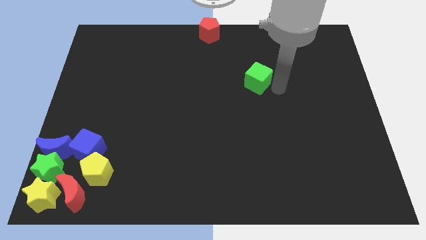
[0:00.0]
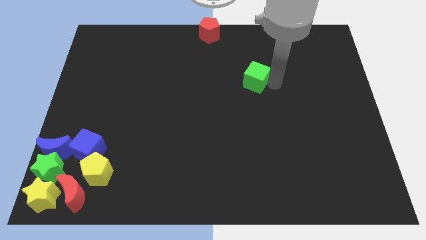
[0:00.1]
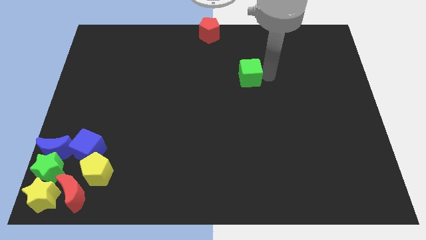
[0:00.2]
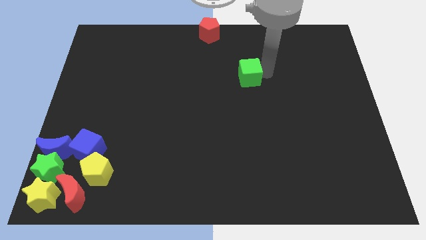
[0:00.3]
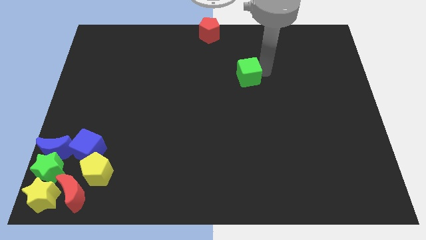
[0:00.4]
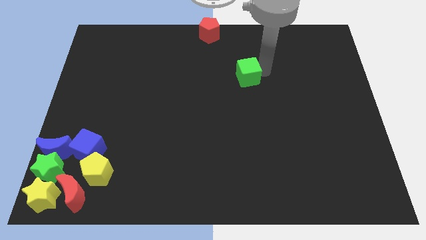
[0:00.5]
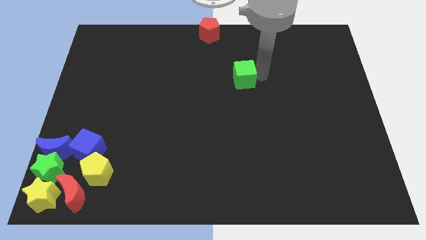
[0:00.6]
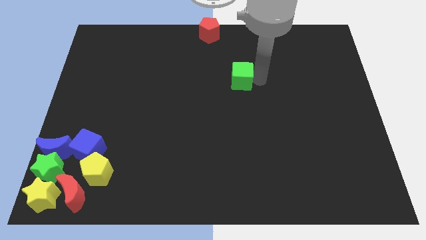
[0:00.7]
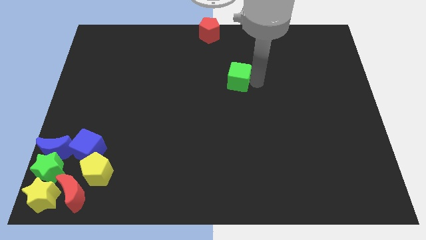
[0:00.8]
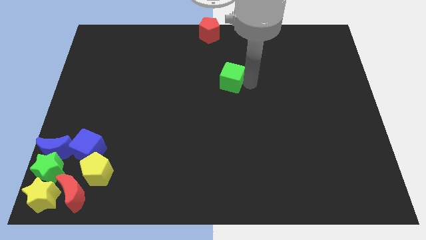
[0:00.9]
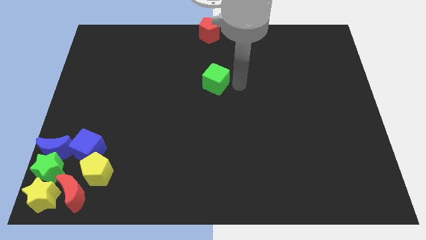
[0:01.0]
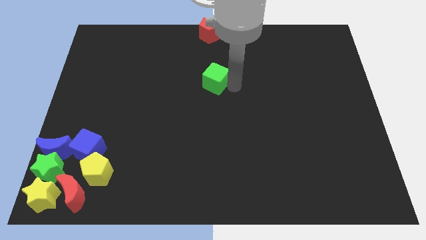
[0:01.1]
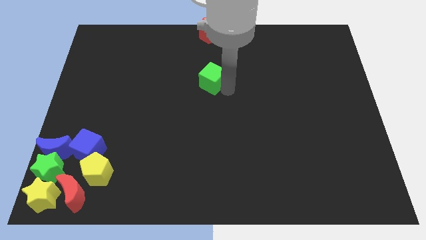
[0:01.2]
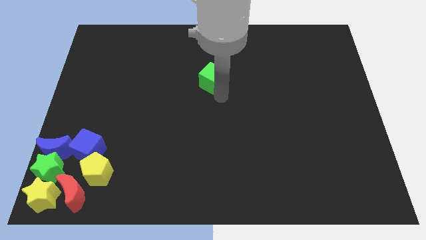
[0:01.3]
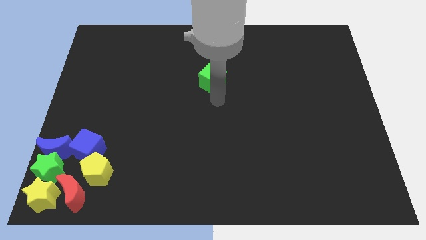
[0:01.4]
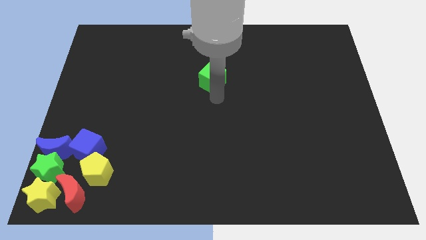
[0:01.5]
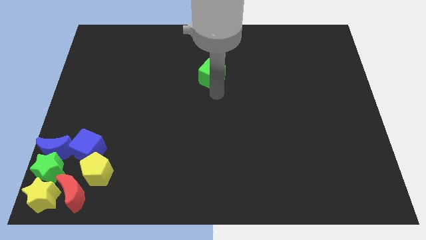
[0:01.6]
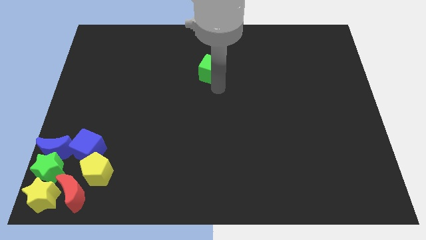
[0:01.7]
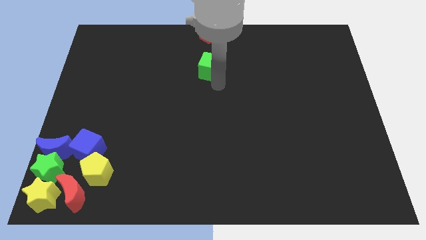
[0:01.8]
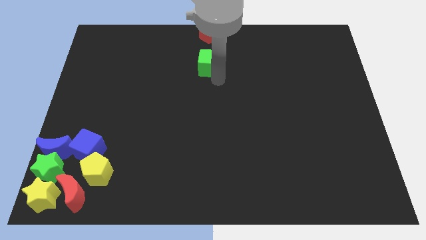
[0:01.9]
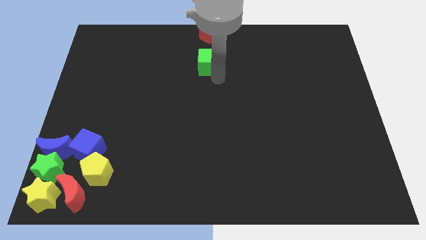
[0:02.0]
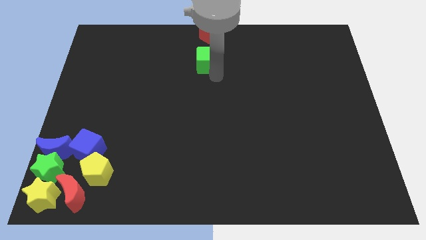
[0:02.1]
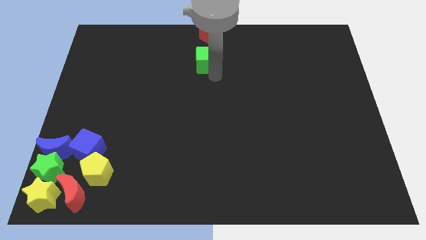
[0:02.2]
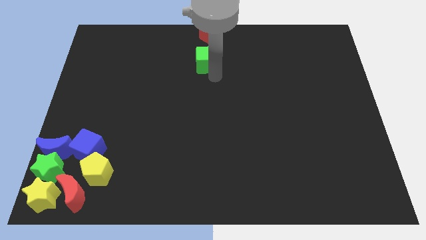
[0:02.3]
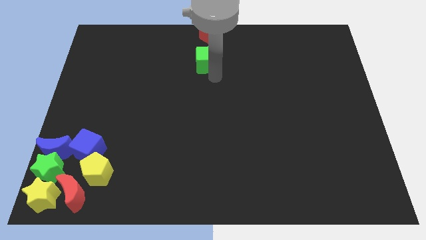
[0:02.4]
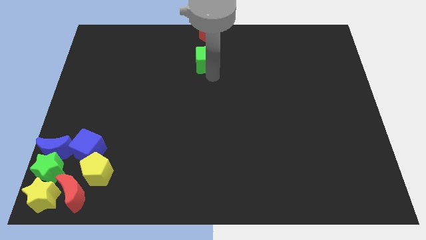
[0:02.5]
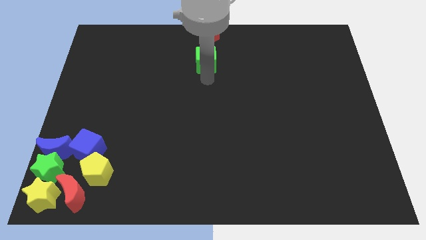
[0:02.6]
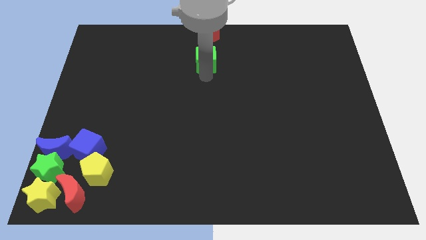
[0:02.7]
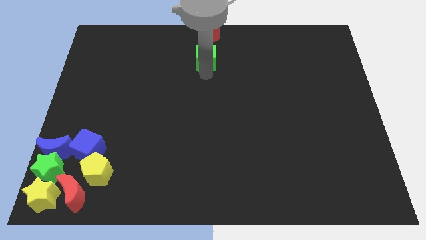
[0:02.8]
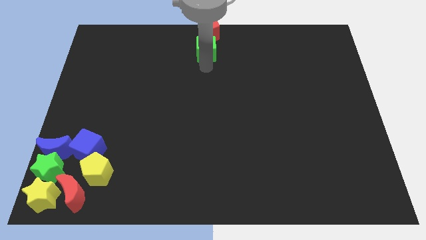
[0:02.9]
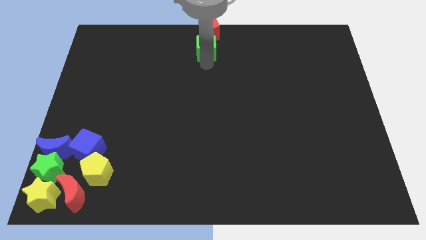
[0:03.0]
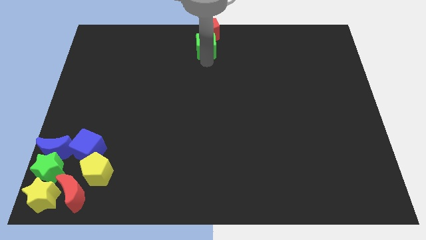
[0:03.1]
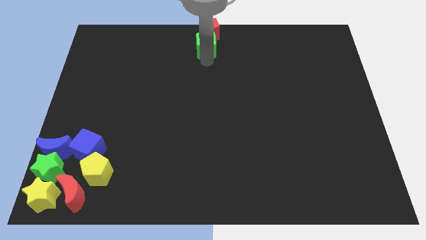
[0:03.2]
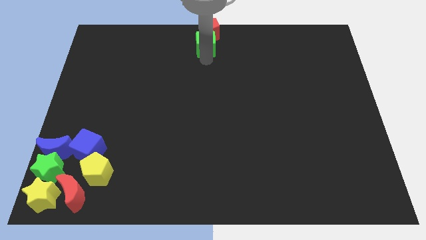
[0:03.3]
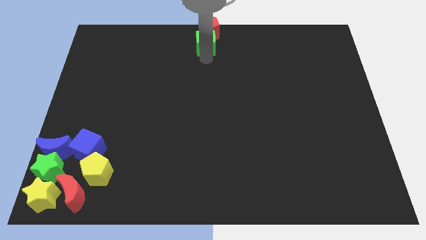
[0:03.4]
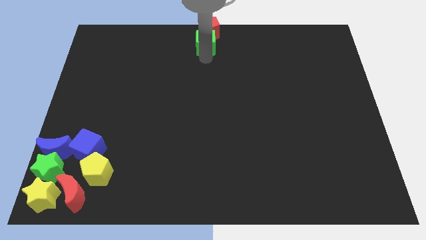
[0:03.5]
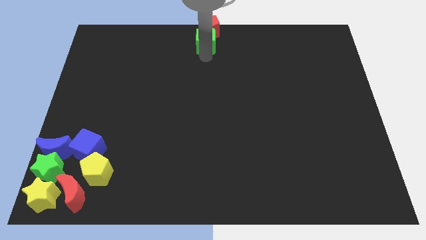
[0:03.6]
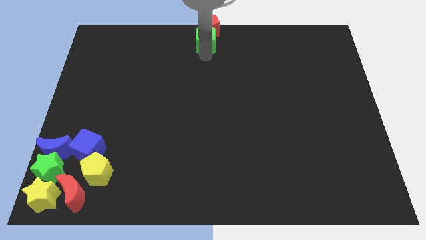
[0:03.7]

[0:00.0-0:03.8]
push the green cube into the red pentagon

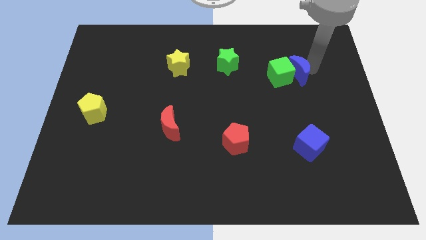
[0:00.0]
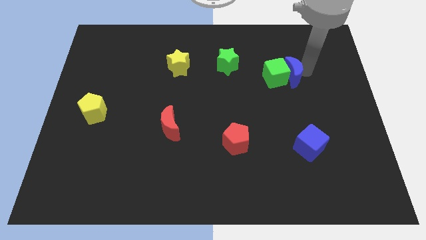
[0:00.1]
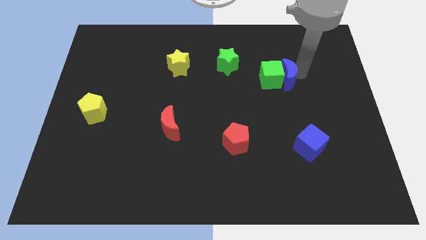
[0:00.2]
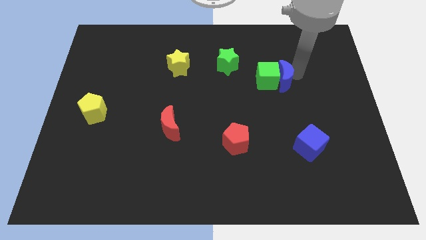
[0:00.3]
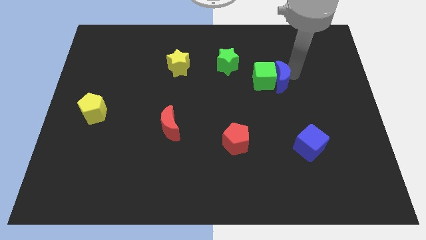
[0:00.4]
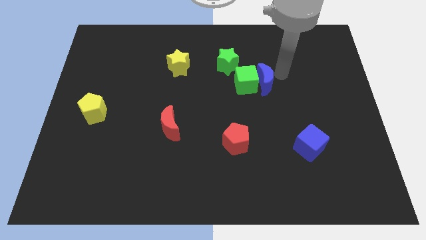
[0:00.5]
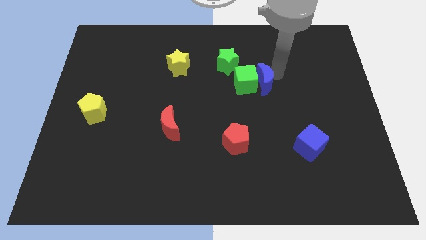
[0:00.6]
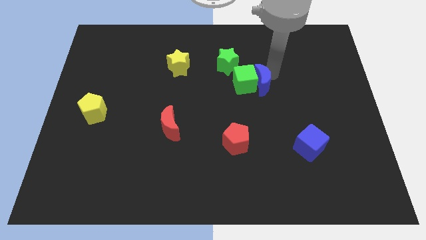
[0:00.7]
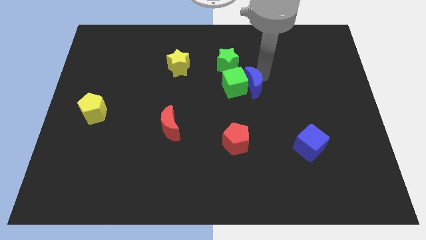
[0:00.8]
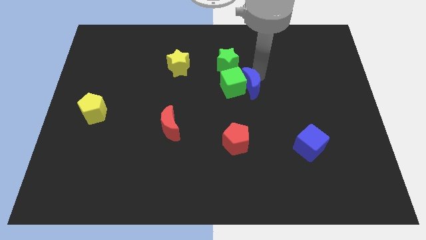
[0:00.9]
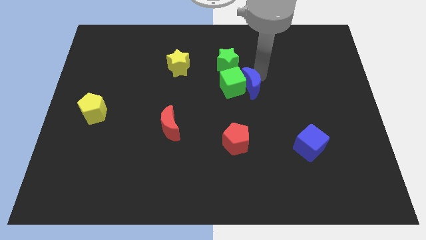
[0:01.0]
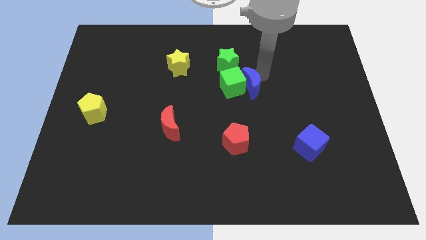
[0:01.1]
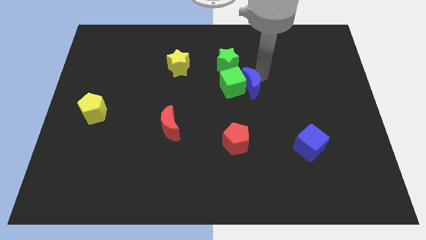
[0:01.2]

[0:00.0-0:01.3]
place green cube along with blue moon below green star

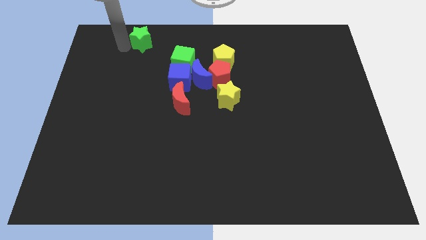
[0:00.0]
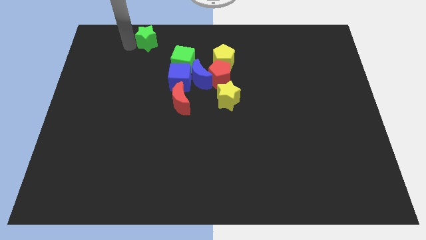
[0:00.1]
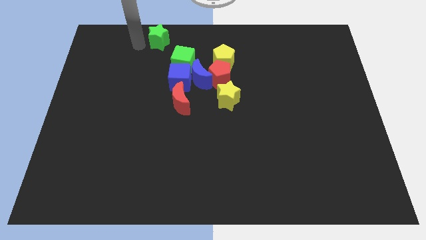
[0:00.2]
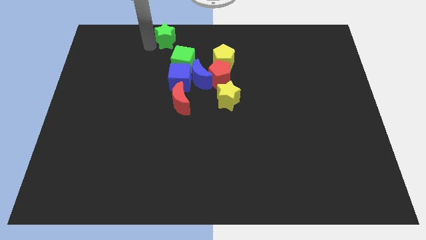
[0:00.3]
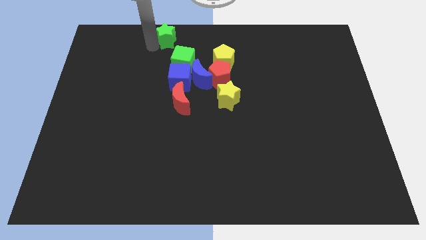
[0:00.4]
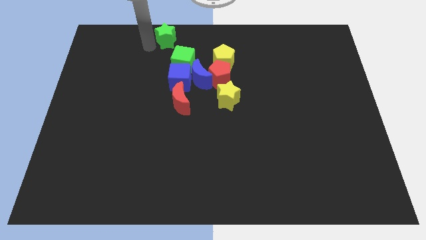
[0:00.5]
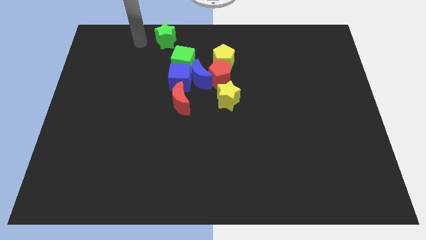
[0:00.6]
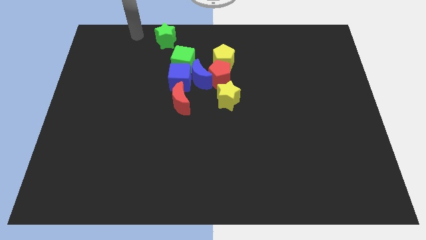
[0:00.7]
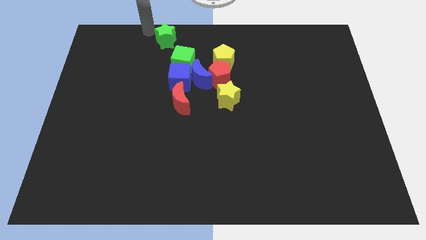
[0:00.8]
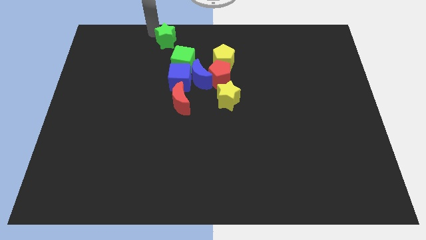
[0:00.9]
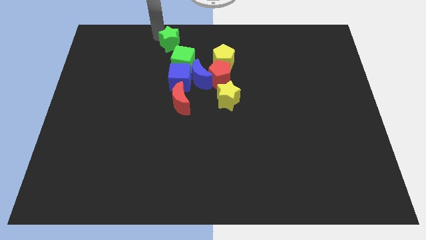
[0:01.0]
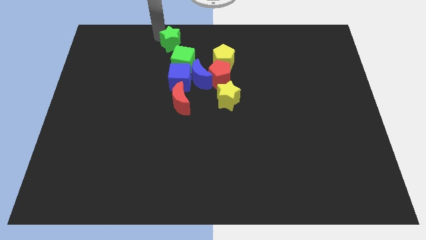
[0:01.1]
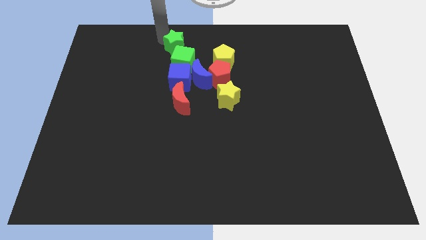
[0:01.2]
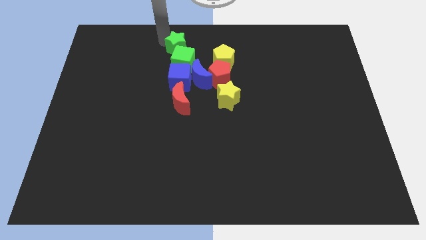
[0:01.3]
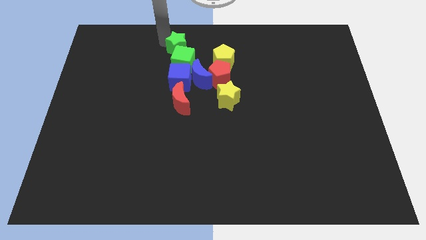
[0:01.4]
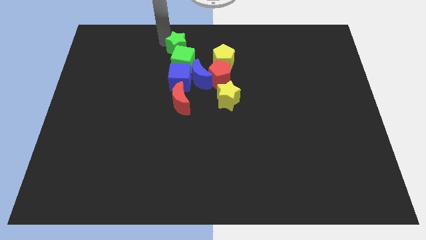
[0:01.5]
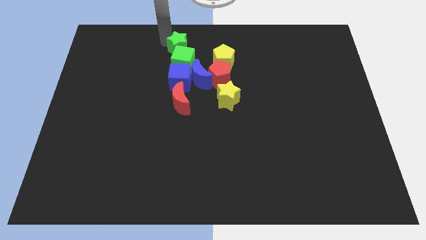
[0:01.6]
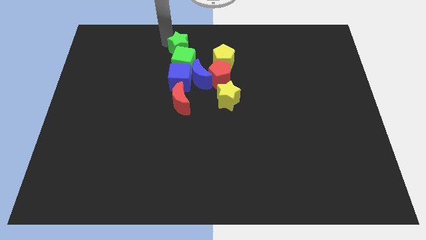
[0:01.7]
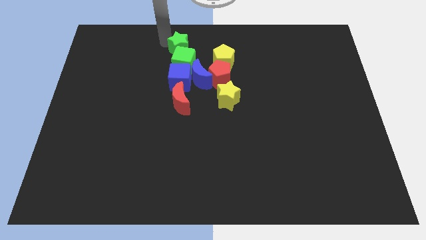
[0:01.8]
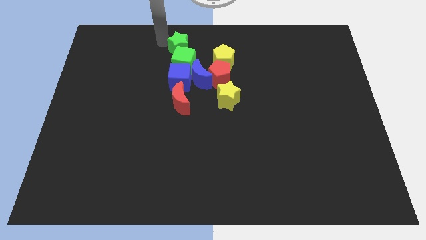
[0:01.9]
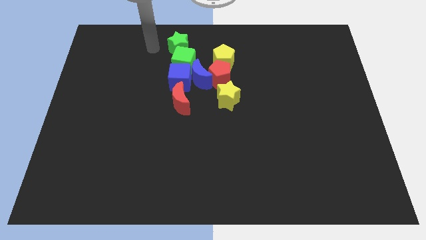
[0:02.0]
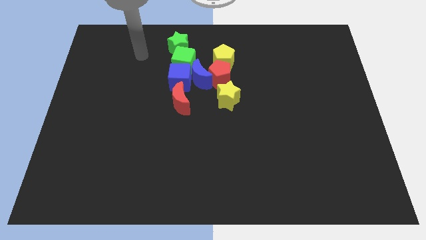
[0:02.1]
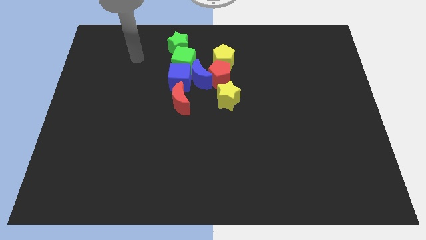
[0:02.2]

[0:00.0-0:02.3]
push the green star into the green cube

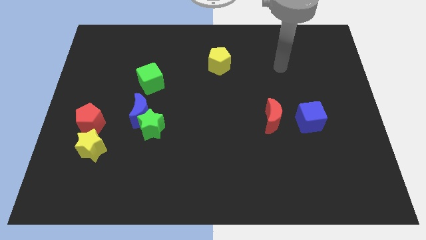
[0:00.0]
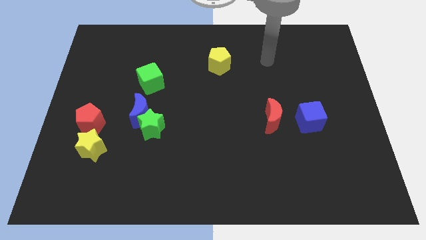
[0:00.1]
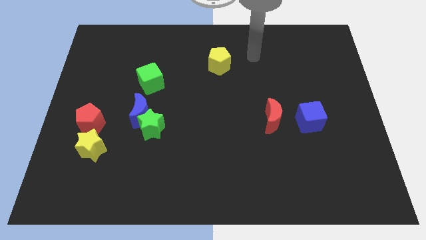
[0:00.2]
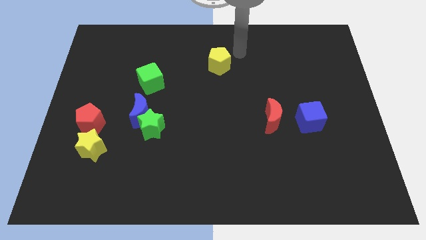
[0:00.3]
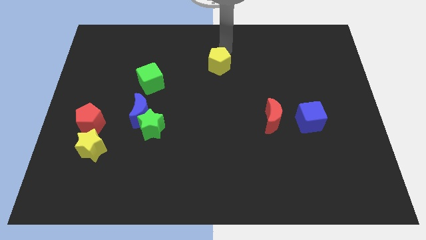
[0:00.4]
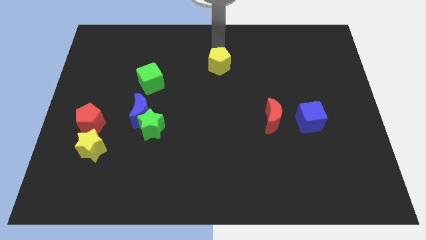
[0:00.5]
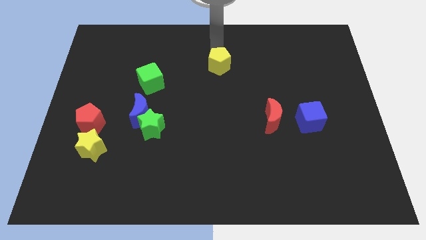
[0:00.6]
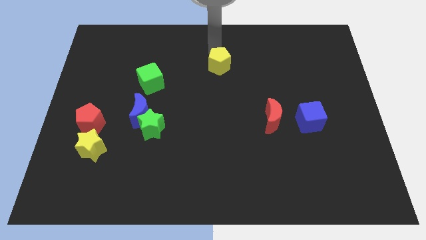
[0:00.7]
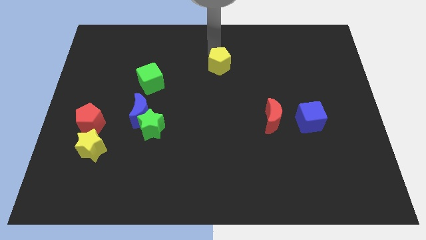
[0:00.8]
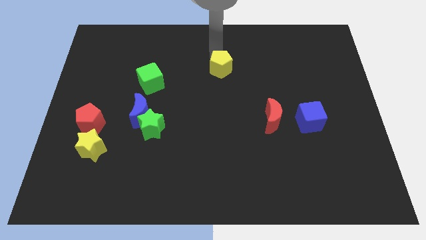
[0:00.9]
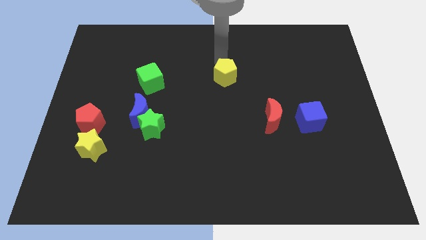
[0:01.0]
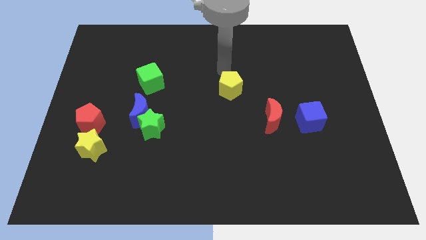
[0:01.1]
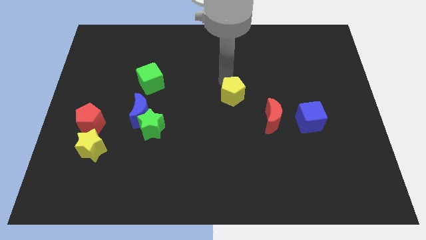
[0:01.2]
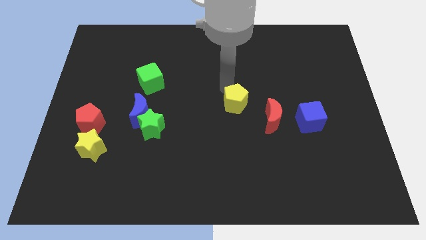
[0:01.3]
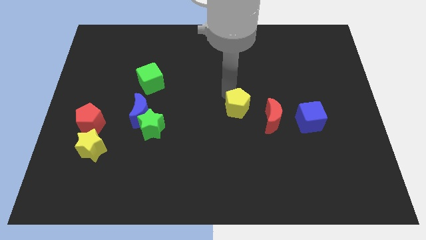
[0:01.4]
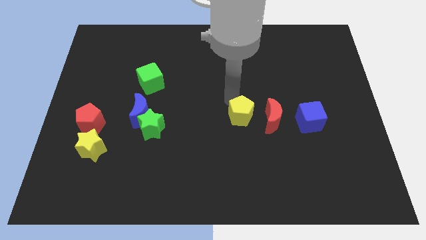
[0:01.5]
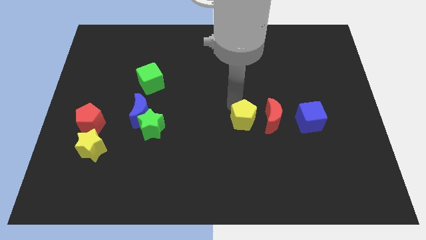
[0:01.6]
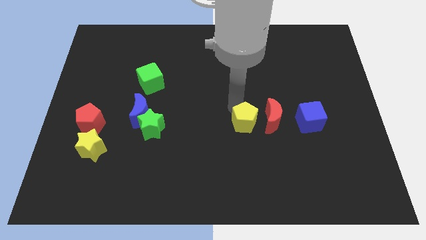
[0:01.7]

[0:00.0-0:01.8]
push the yellow pentagon at the left side of the red moon
